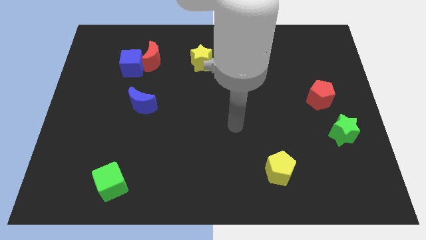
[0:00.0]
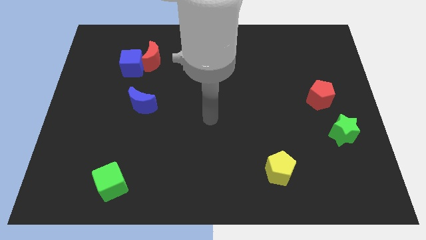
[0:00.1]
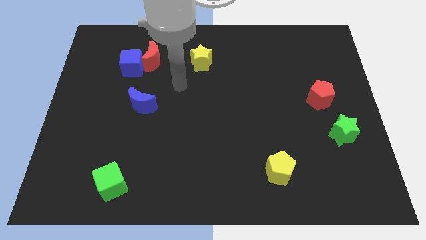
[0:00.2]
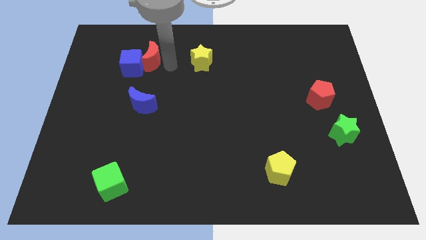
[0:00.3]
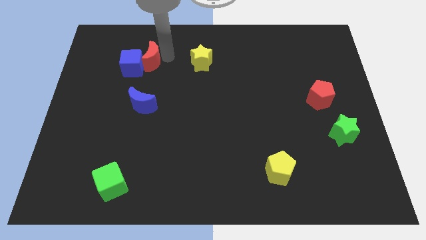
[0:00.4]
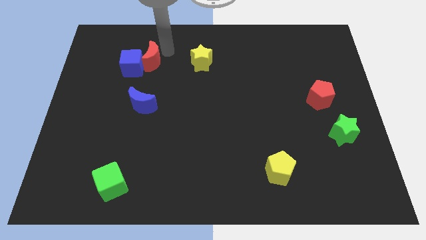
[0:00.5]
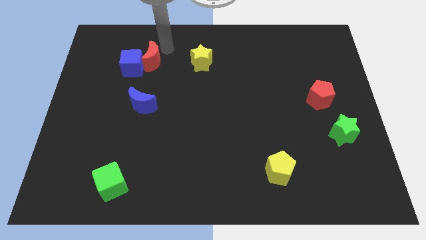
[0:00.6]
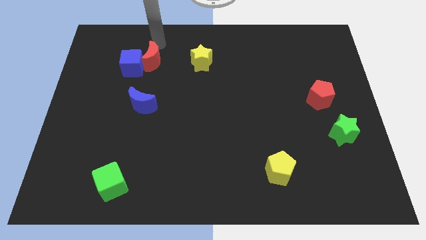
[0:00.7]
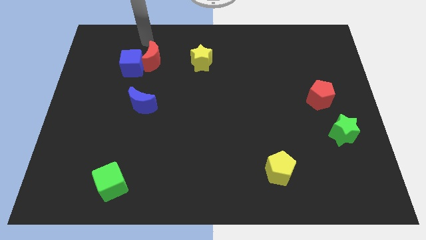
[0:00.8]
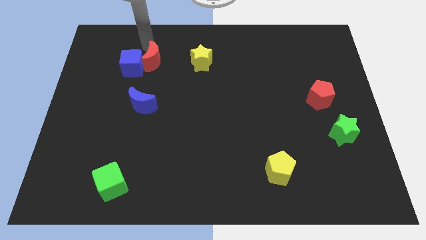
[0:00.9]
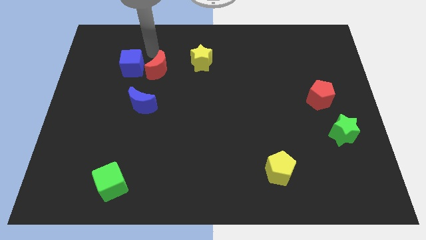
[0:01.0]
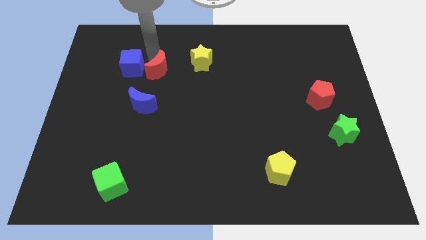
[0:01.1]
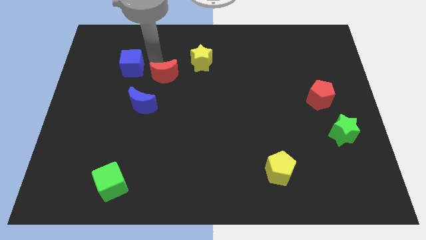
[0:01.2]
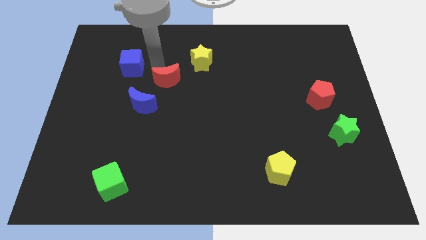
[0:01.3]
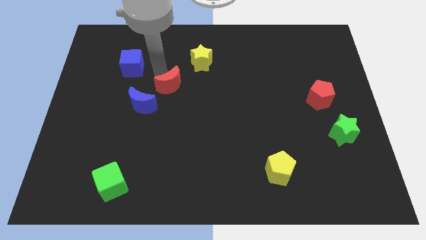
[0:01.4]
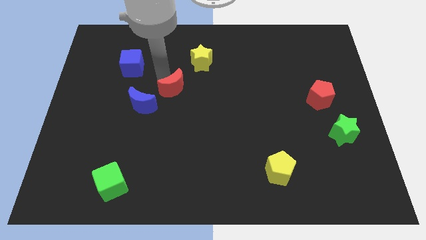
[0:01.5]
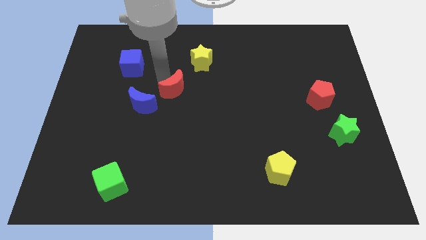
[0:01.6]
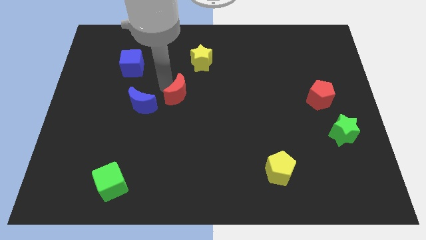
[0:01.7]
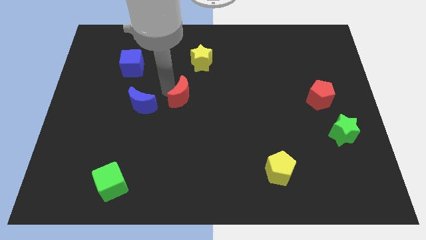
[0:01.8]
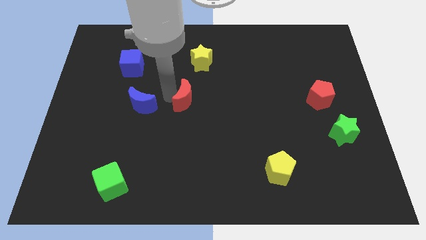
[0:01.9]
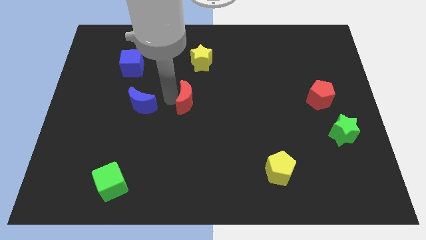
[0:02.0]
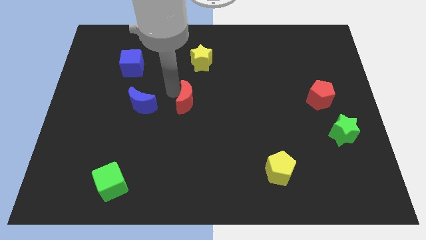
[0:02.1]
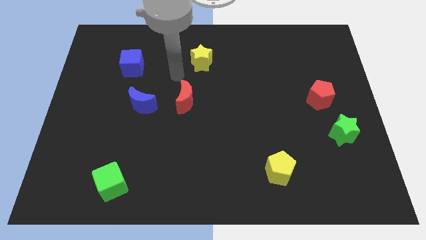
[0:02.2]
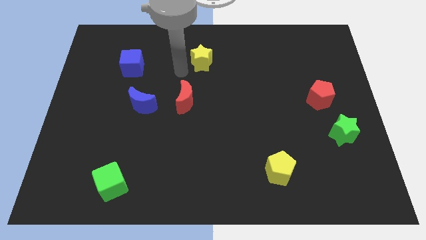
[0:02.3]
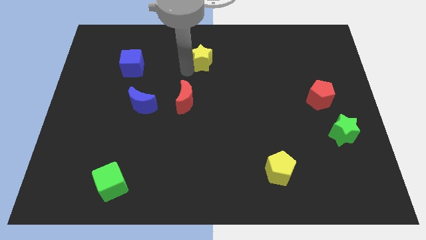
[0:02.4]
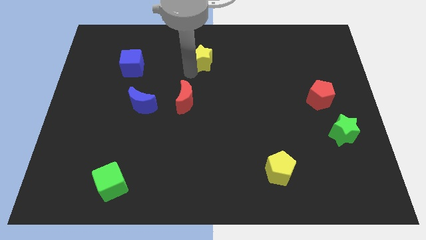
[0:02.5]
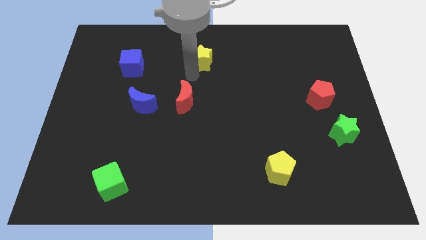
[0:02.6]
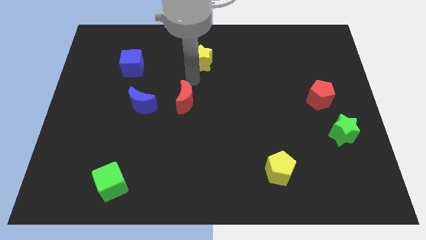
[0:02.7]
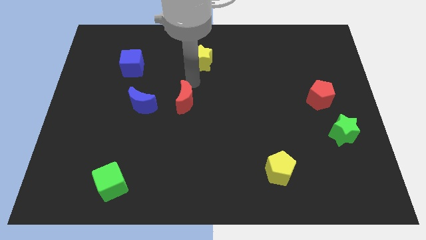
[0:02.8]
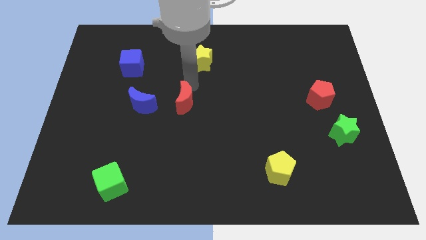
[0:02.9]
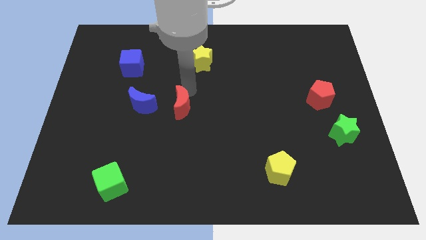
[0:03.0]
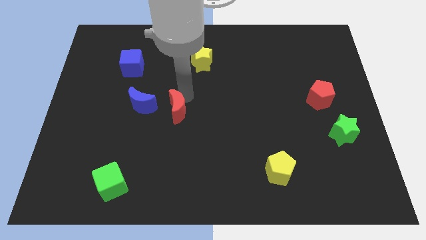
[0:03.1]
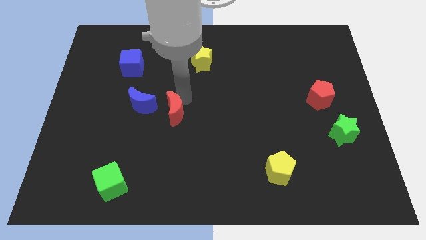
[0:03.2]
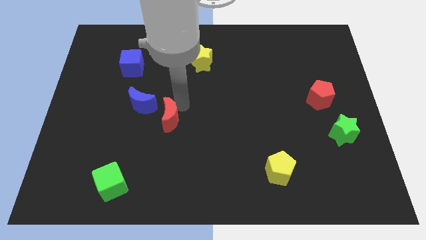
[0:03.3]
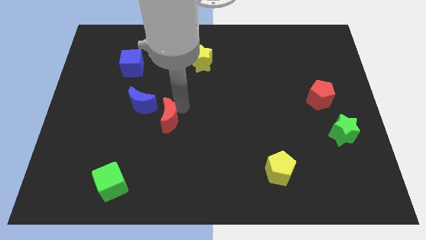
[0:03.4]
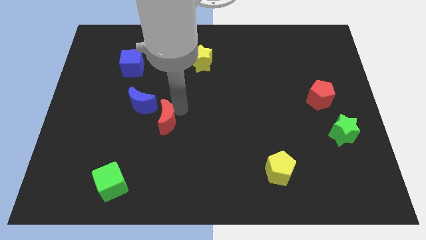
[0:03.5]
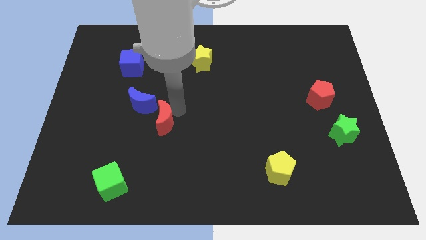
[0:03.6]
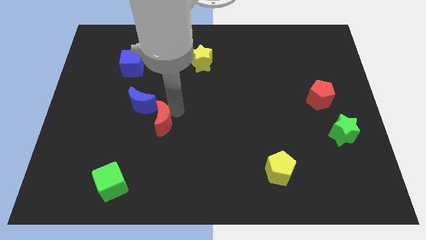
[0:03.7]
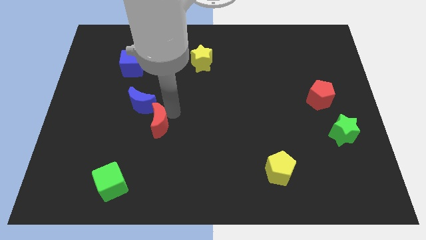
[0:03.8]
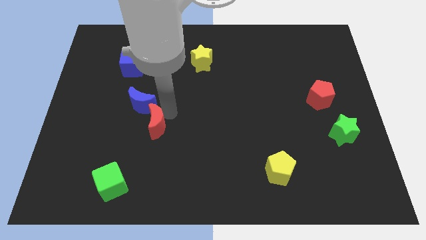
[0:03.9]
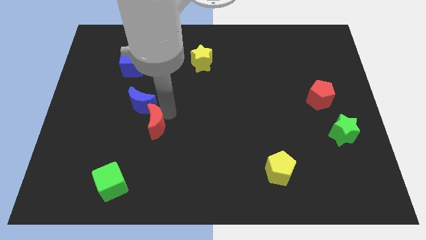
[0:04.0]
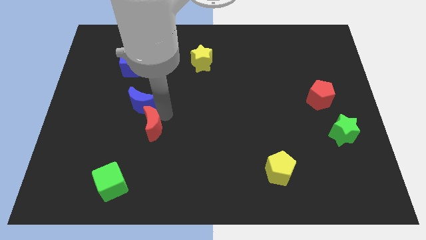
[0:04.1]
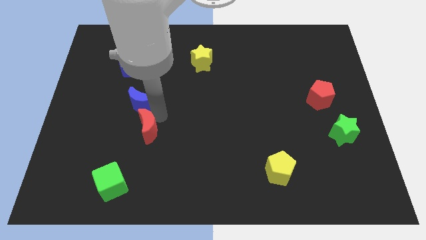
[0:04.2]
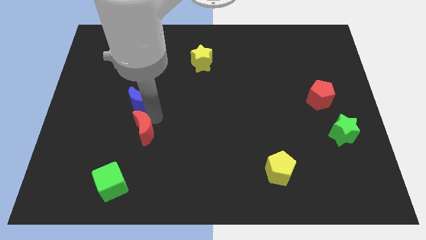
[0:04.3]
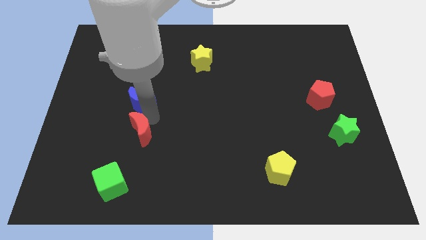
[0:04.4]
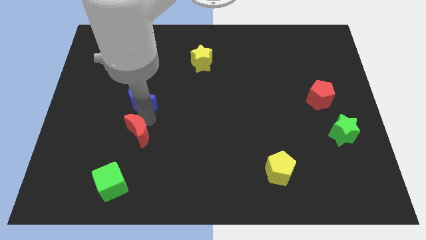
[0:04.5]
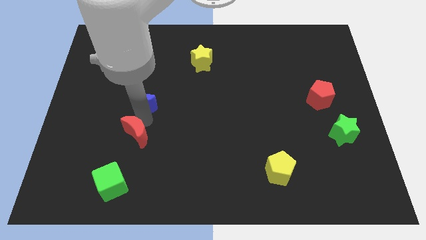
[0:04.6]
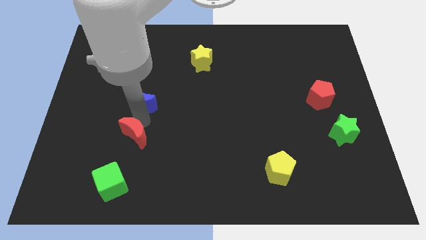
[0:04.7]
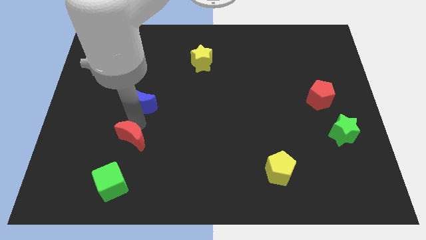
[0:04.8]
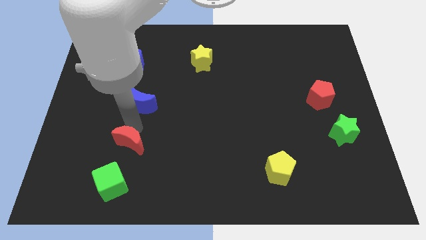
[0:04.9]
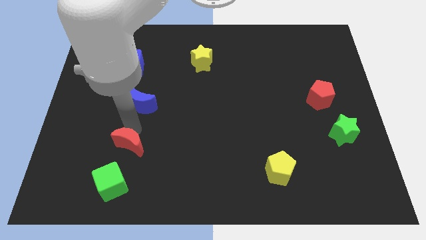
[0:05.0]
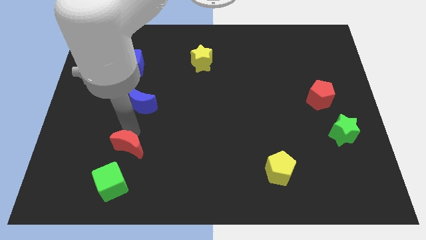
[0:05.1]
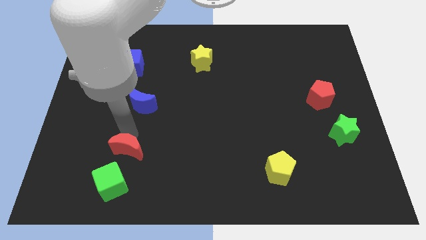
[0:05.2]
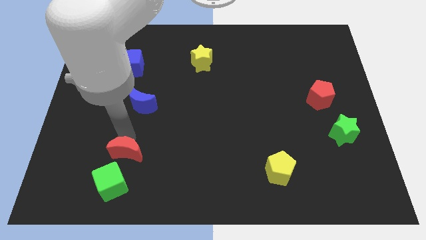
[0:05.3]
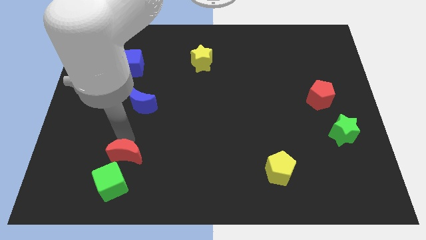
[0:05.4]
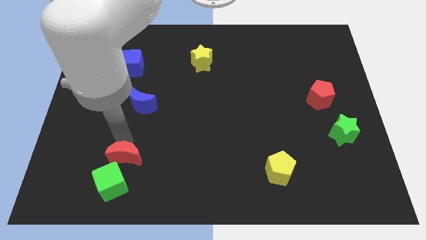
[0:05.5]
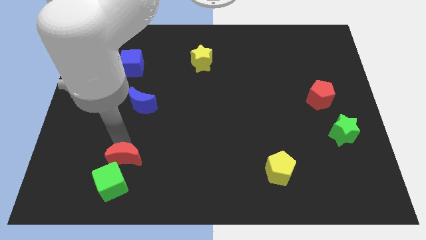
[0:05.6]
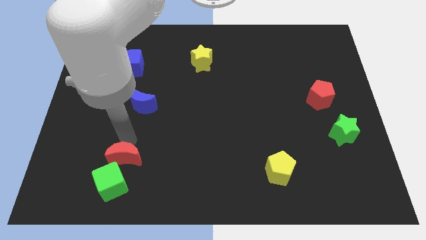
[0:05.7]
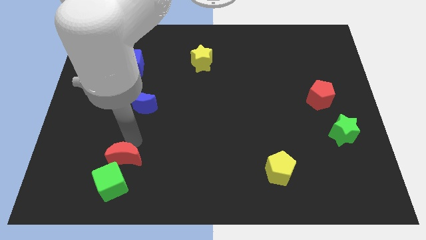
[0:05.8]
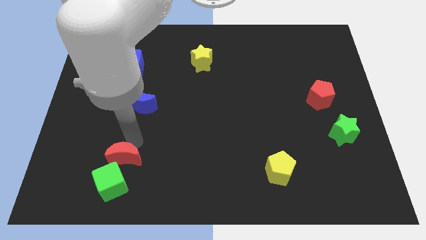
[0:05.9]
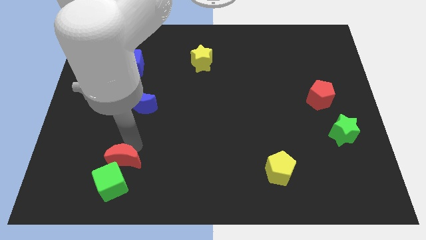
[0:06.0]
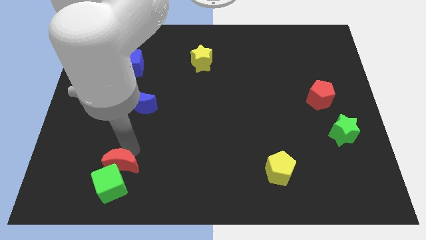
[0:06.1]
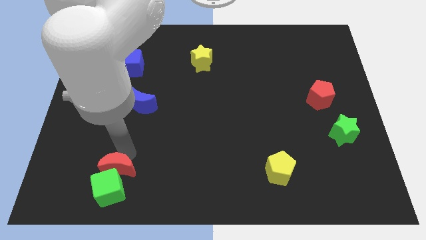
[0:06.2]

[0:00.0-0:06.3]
put the red moon next to the green cube

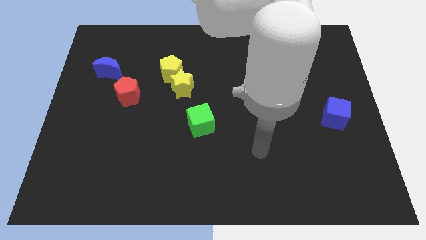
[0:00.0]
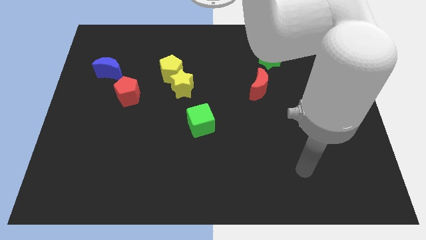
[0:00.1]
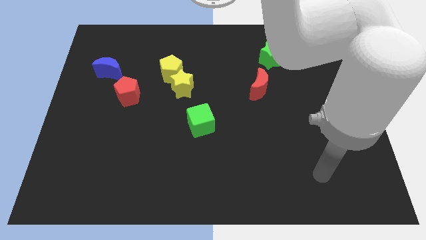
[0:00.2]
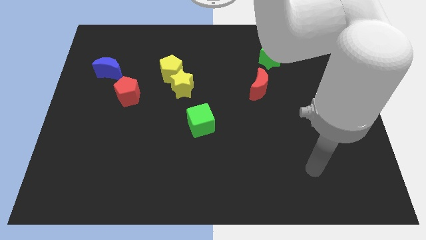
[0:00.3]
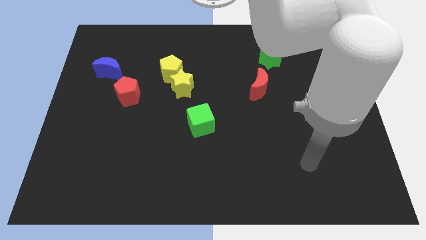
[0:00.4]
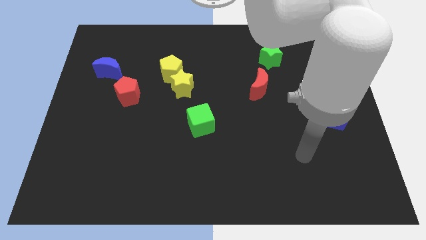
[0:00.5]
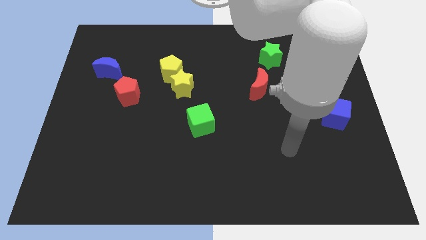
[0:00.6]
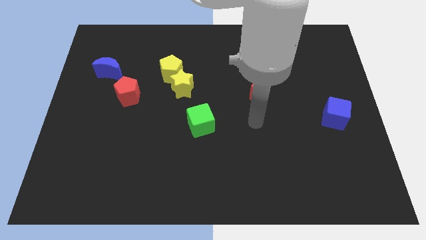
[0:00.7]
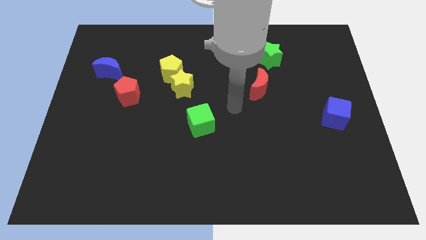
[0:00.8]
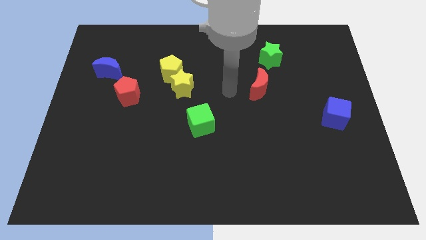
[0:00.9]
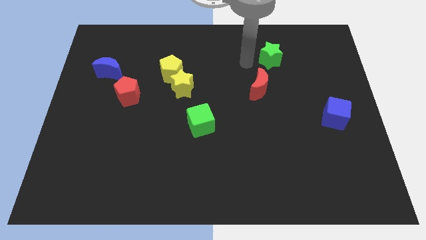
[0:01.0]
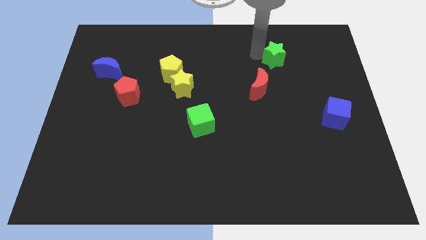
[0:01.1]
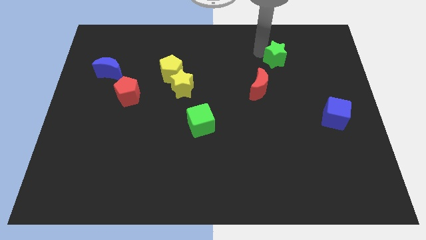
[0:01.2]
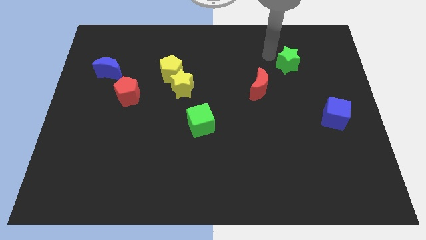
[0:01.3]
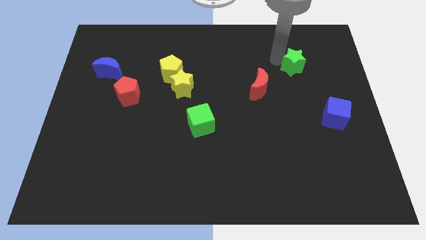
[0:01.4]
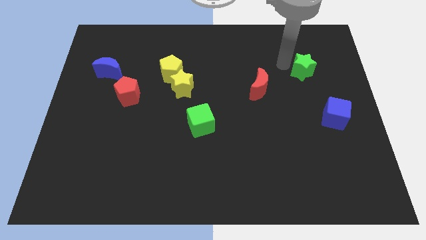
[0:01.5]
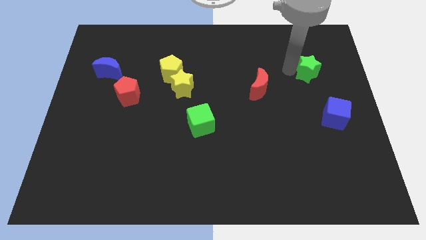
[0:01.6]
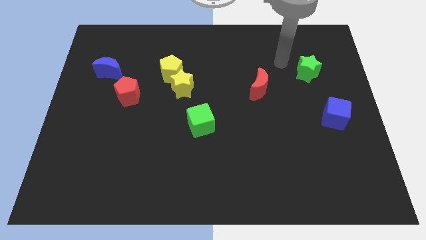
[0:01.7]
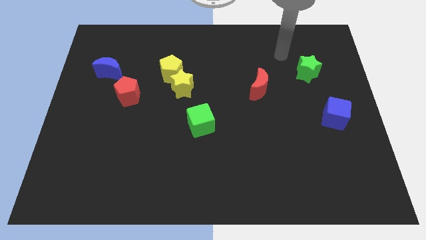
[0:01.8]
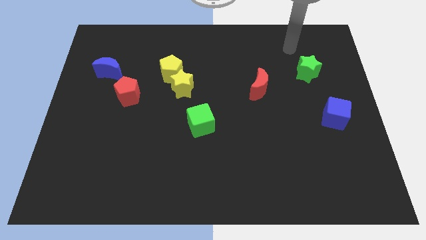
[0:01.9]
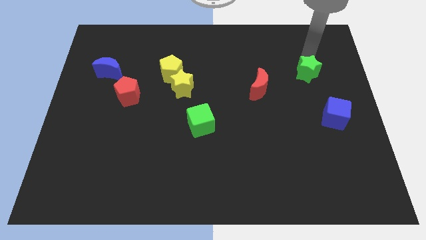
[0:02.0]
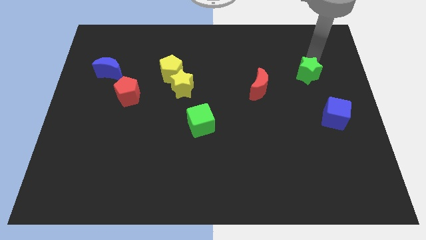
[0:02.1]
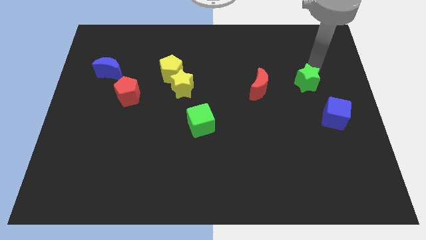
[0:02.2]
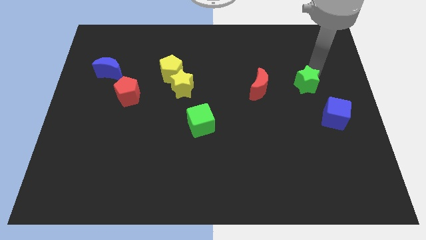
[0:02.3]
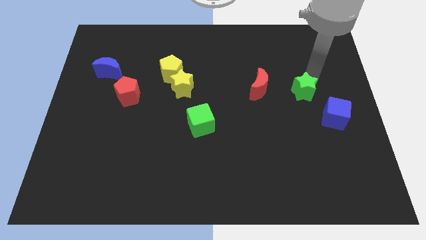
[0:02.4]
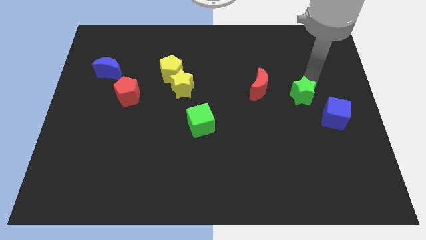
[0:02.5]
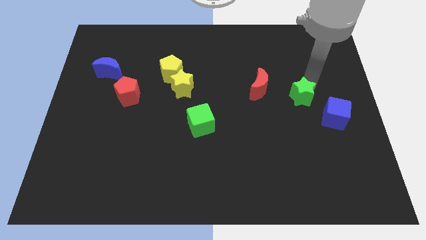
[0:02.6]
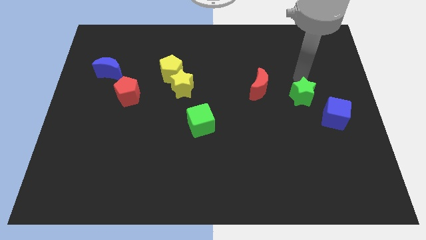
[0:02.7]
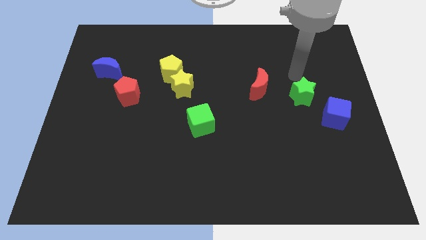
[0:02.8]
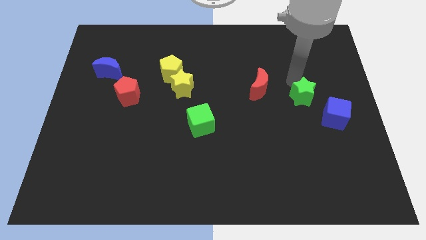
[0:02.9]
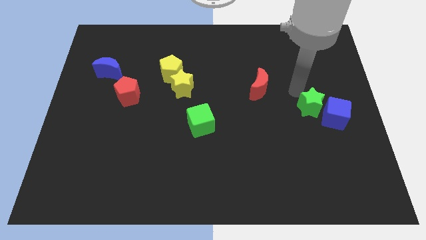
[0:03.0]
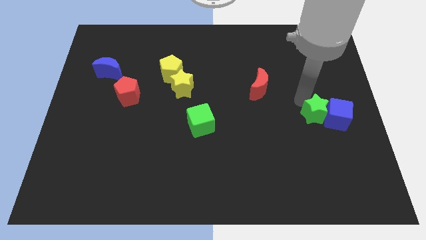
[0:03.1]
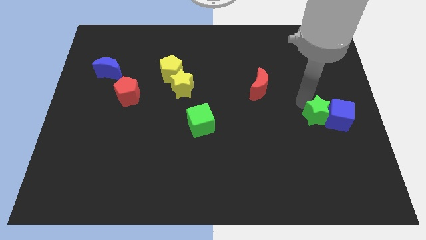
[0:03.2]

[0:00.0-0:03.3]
slide the green star close to the blue cube
